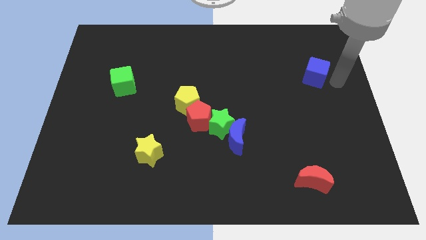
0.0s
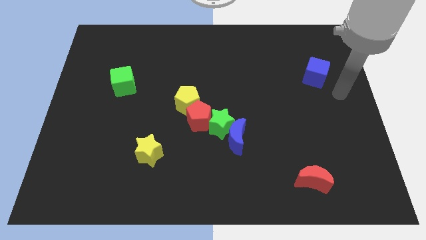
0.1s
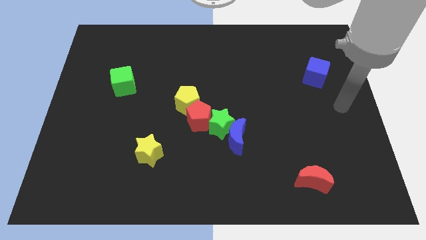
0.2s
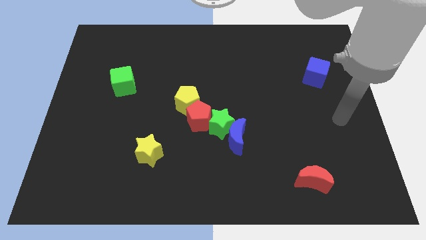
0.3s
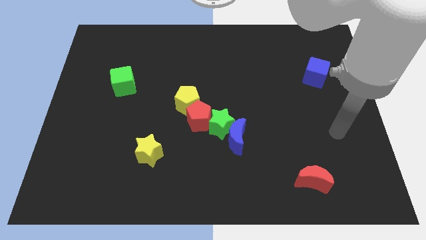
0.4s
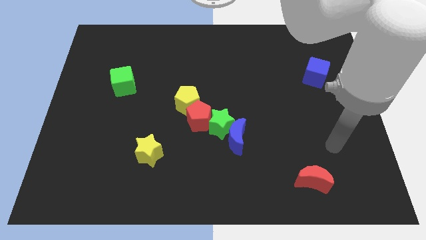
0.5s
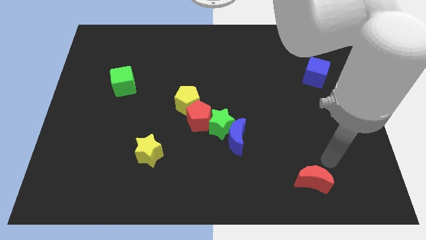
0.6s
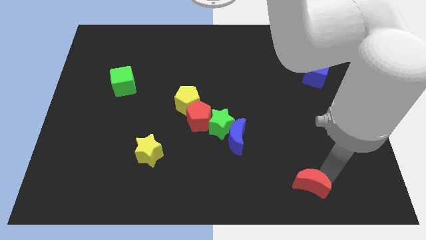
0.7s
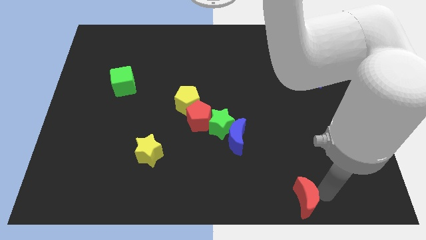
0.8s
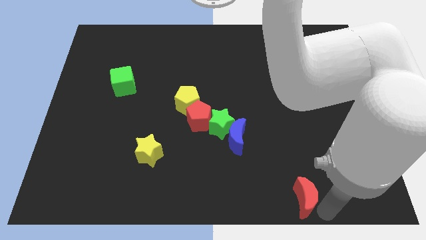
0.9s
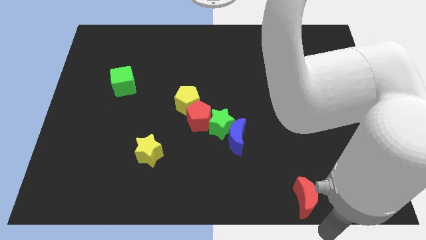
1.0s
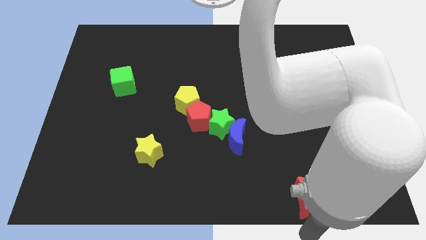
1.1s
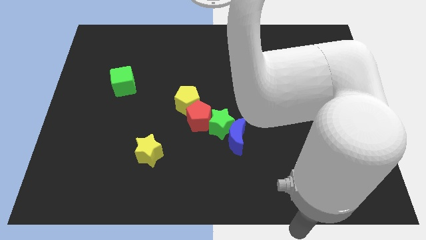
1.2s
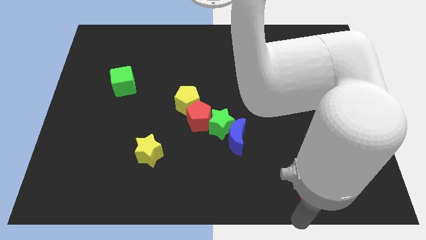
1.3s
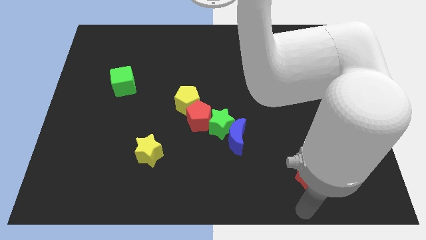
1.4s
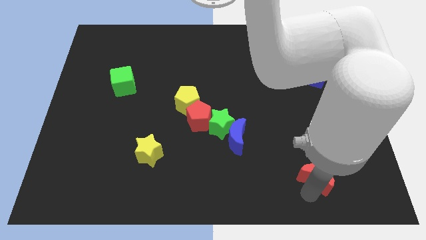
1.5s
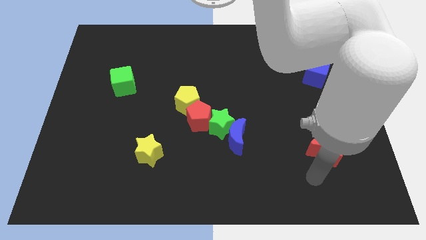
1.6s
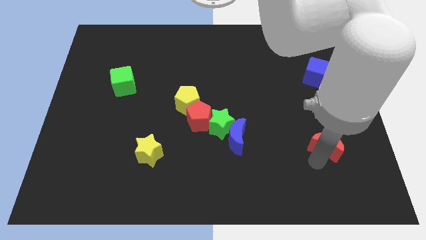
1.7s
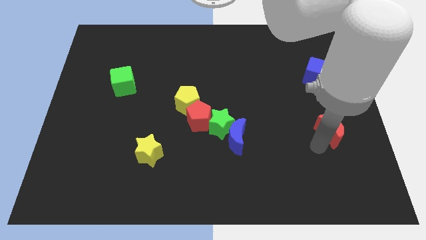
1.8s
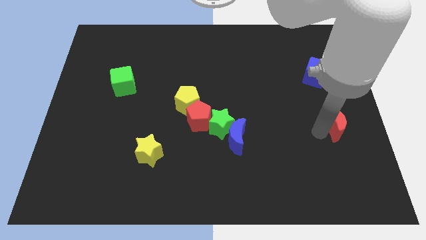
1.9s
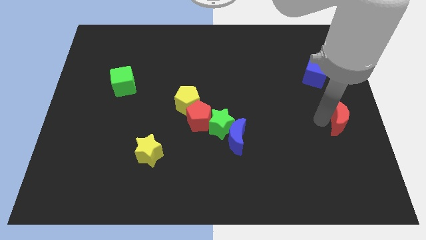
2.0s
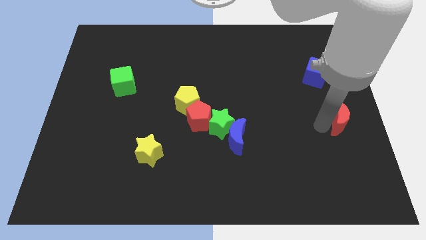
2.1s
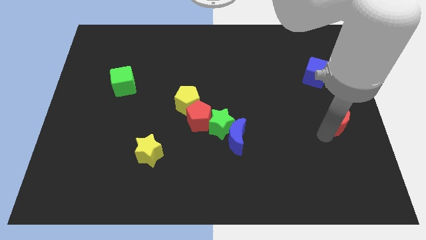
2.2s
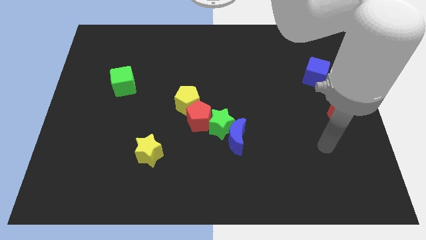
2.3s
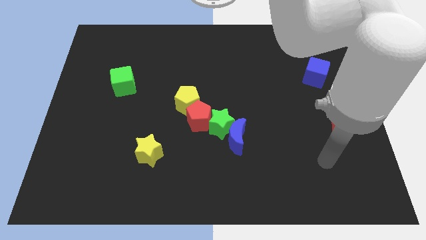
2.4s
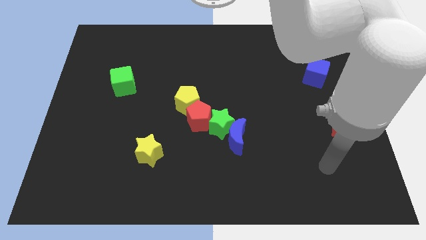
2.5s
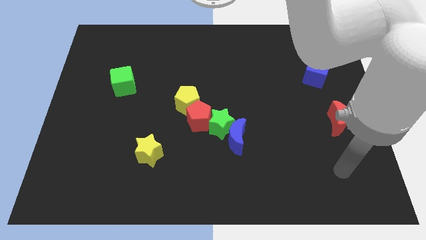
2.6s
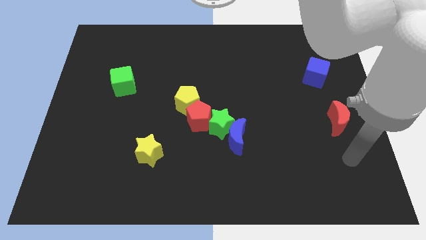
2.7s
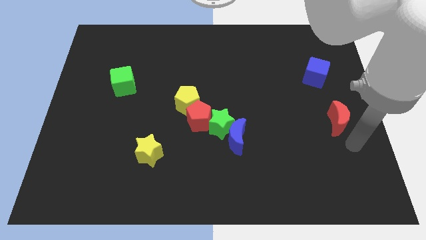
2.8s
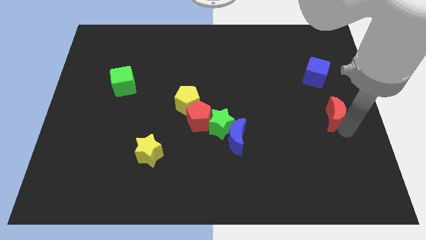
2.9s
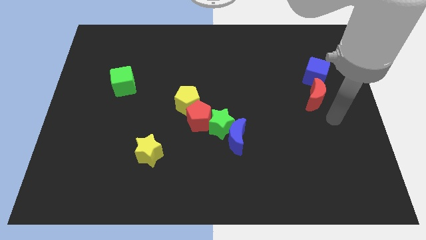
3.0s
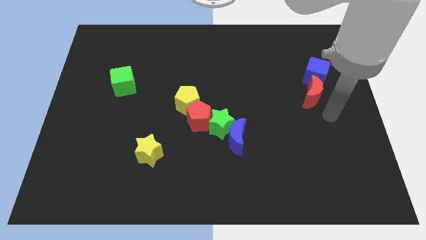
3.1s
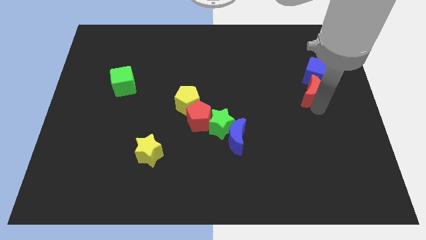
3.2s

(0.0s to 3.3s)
push the red crescent to the bottom of the blue cube

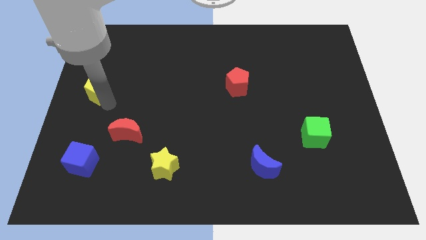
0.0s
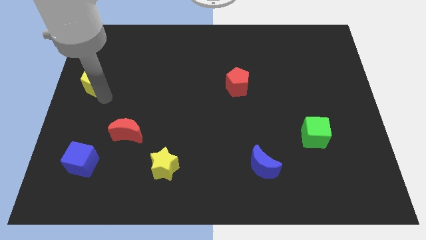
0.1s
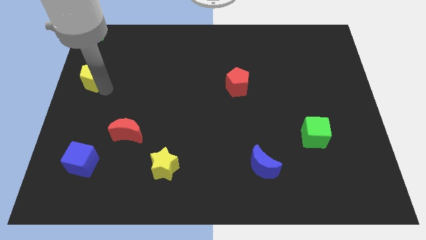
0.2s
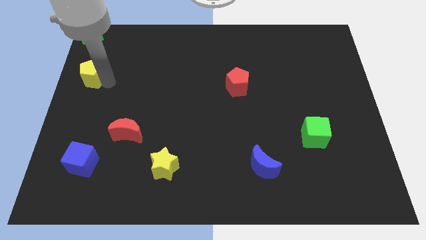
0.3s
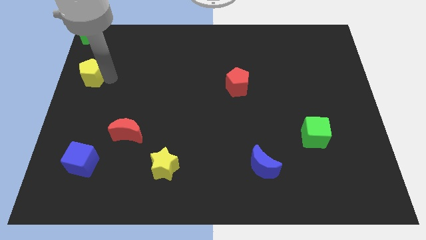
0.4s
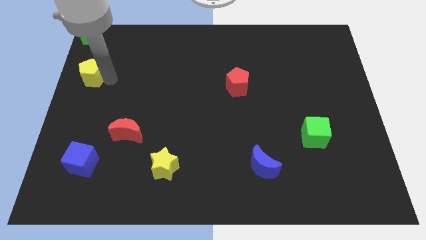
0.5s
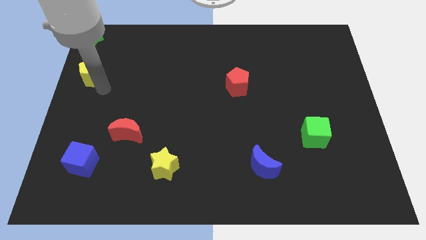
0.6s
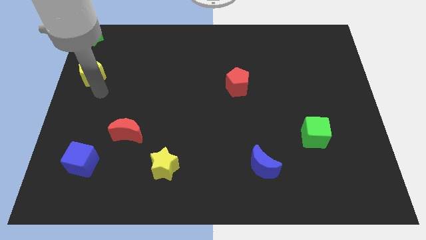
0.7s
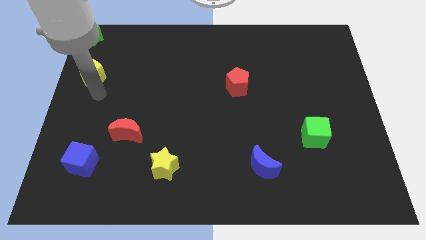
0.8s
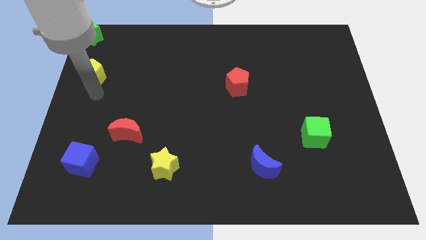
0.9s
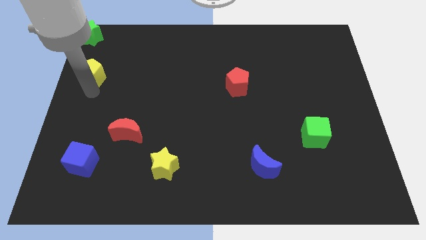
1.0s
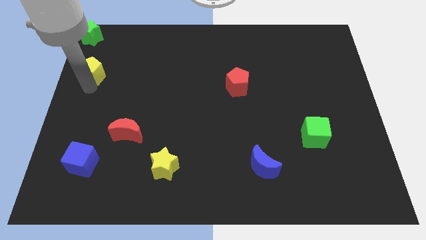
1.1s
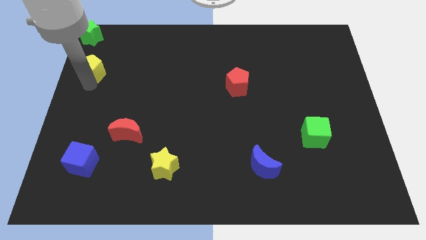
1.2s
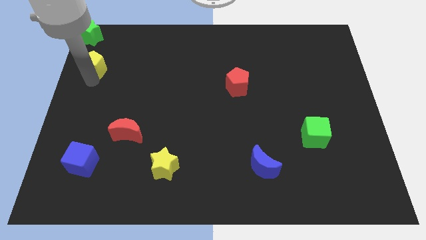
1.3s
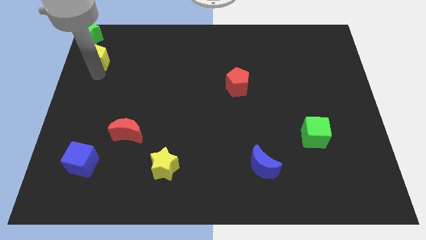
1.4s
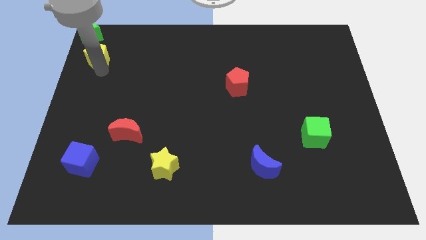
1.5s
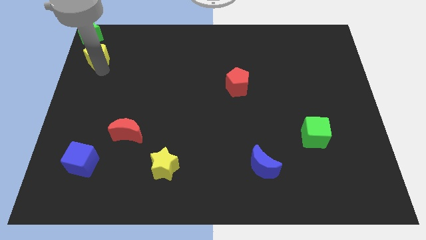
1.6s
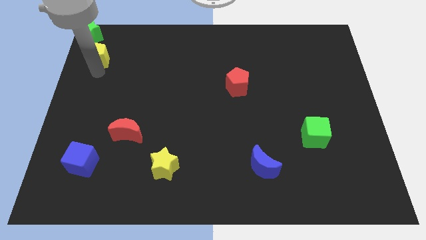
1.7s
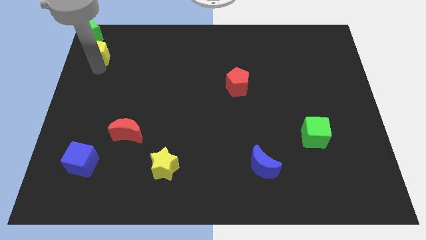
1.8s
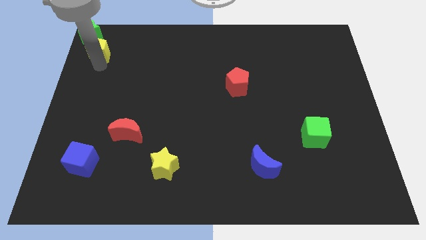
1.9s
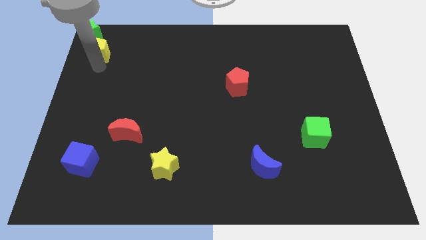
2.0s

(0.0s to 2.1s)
move the yellow pentagon to the bottom of the green star

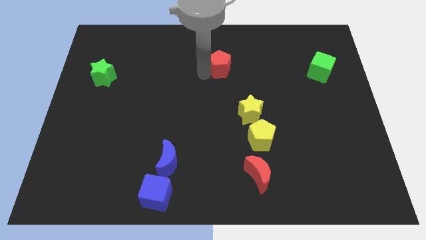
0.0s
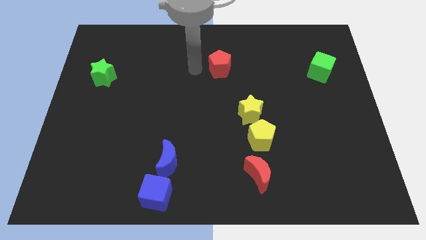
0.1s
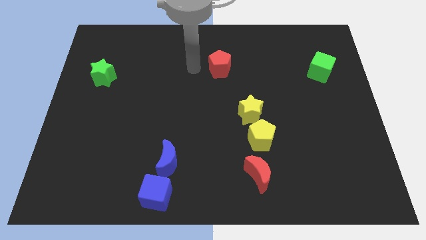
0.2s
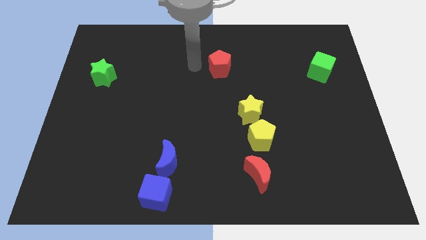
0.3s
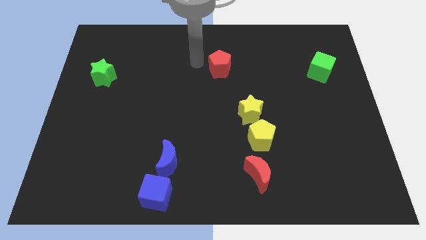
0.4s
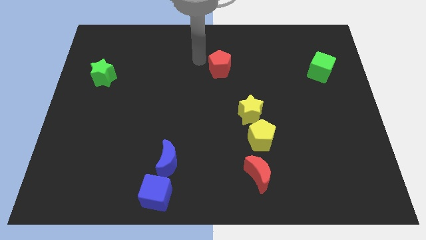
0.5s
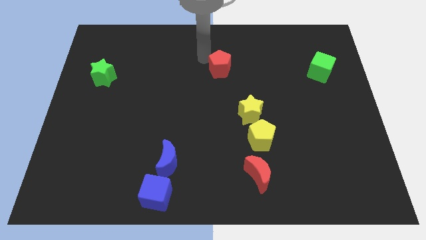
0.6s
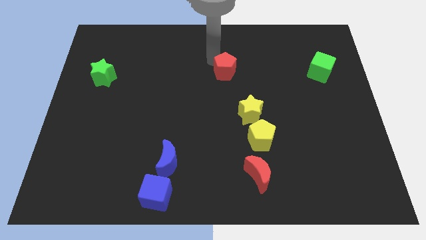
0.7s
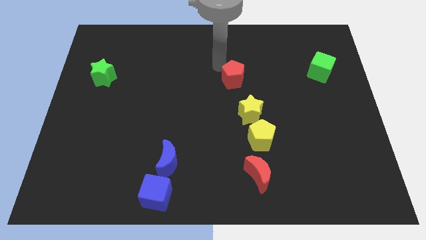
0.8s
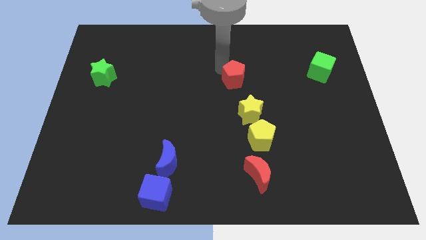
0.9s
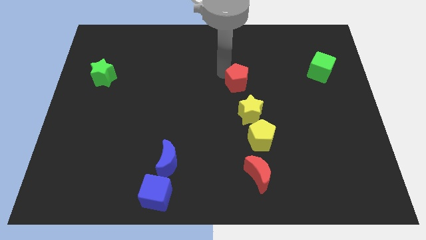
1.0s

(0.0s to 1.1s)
push the red pentagon to the top left side of the yellow star

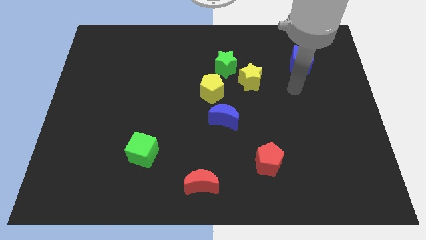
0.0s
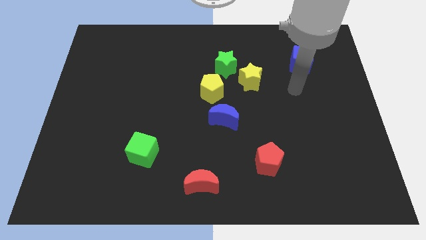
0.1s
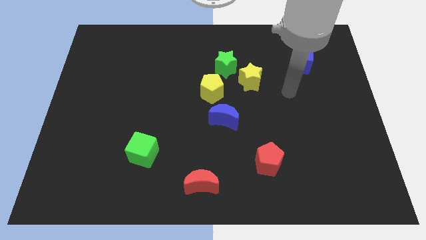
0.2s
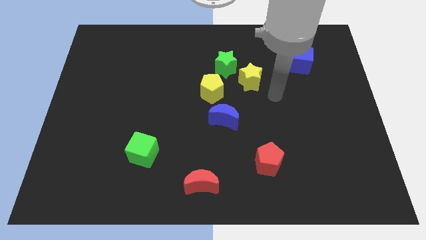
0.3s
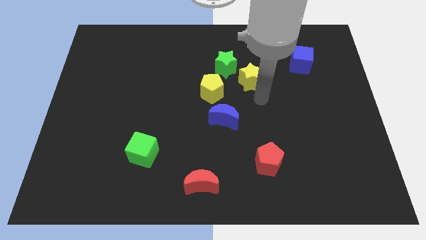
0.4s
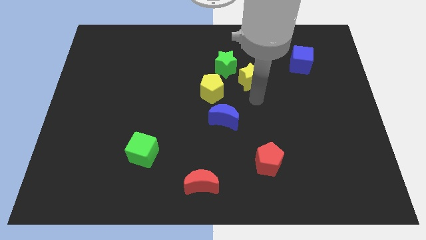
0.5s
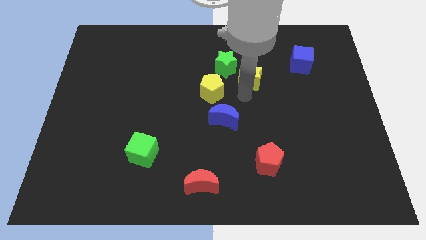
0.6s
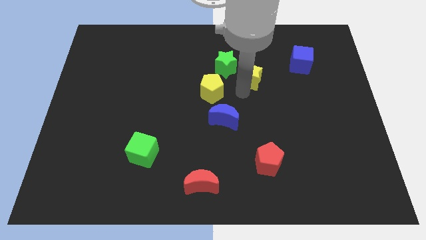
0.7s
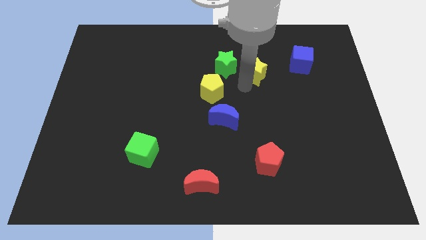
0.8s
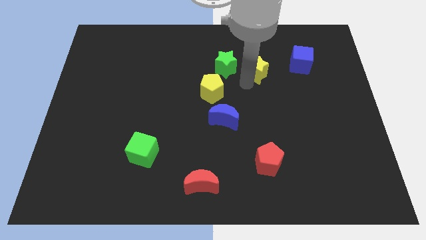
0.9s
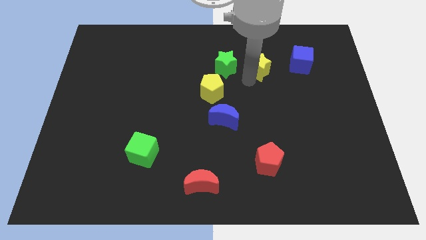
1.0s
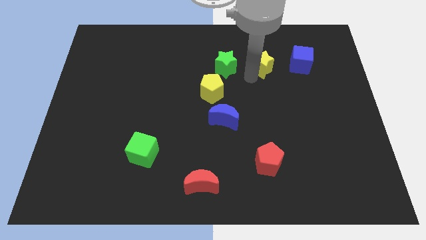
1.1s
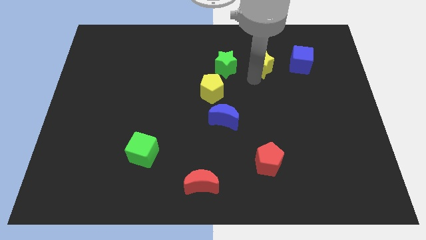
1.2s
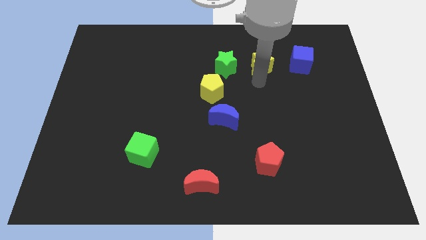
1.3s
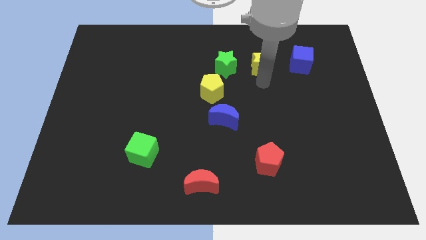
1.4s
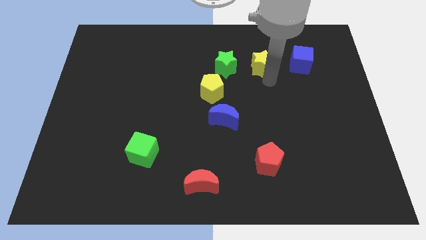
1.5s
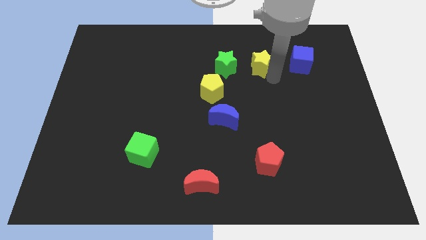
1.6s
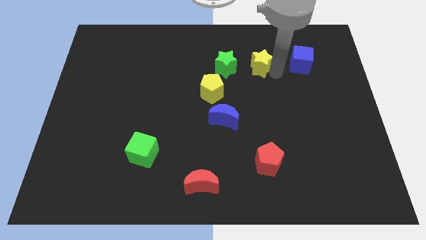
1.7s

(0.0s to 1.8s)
slightly move the yellow star towards top side of the board

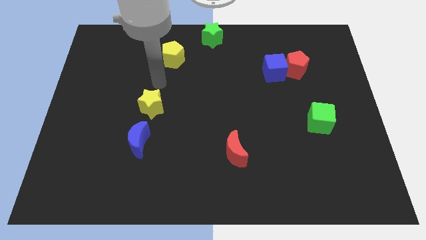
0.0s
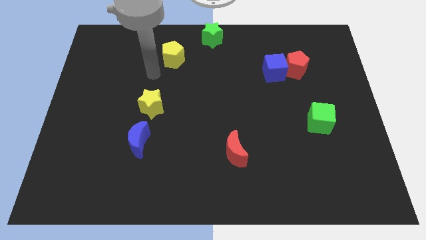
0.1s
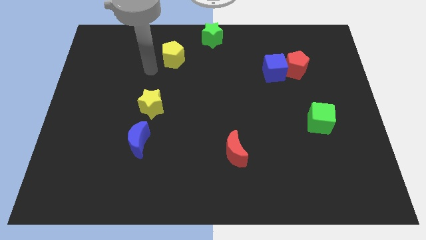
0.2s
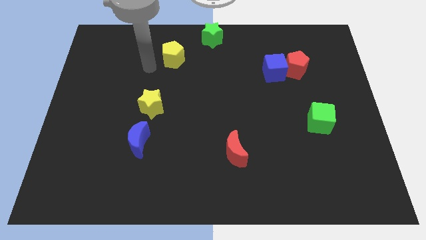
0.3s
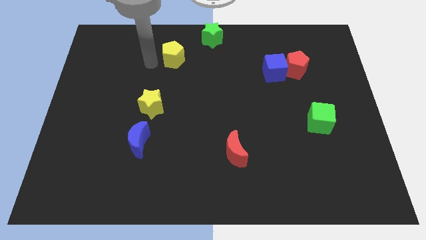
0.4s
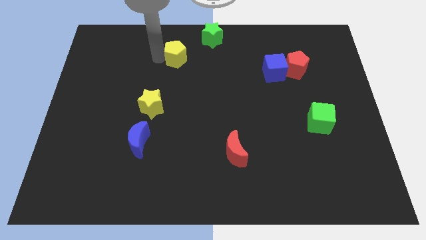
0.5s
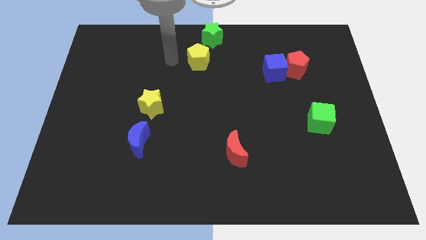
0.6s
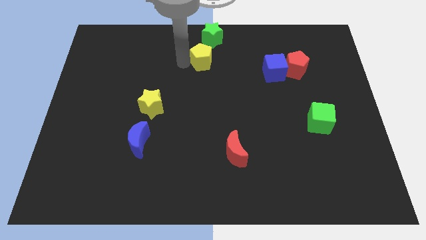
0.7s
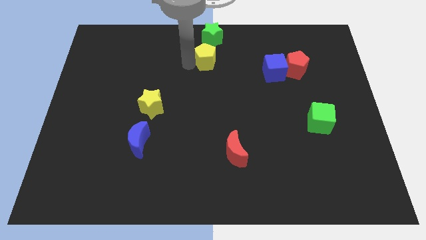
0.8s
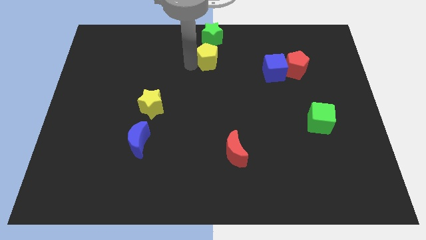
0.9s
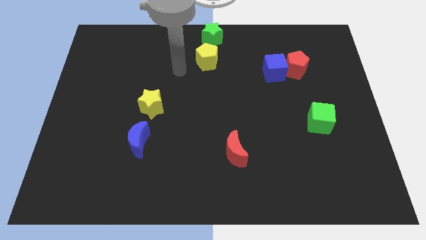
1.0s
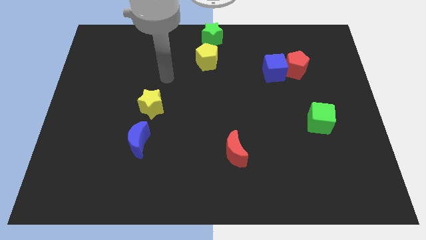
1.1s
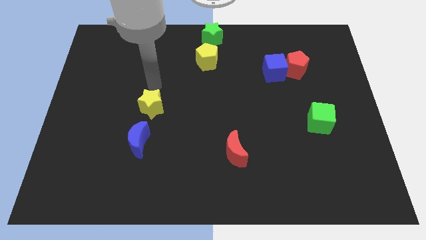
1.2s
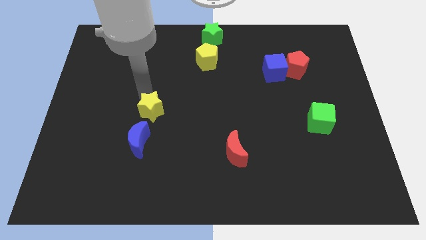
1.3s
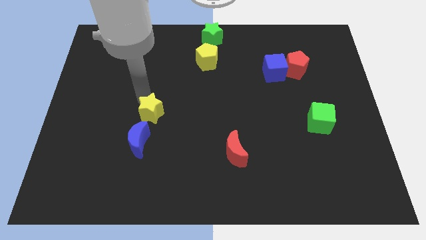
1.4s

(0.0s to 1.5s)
push the yellow pentagon to the bottom of green star
